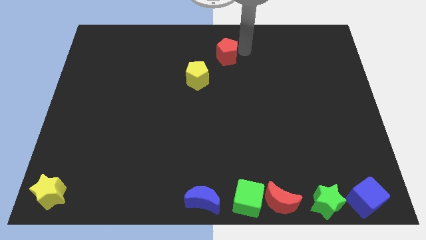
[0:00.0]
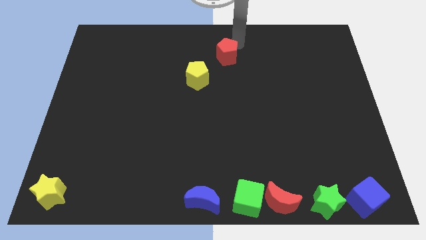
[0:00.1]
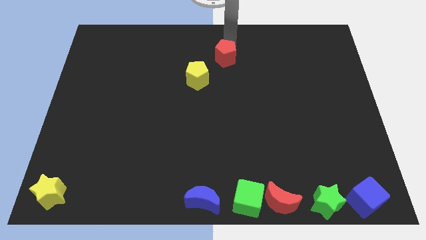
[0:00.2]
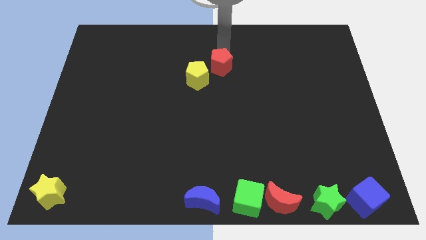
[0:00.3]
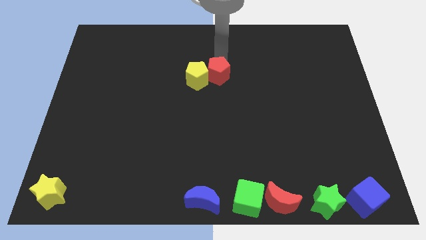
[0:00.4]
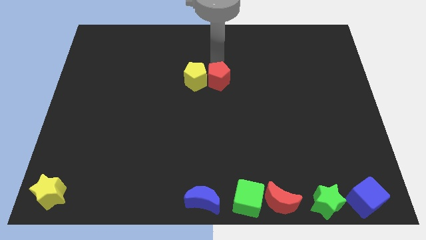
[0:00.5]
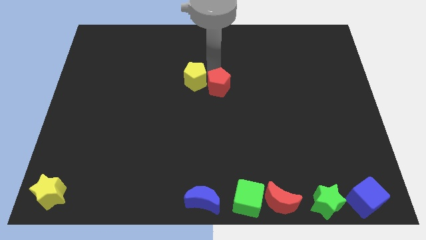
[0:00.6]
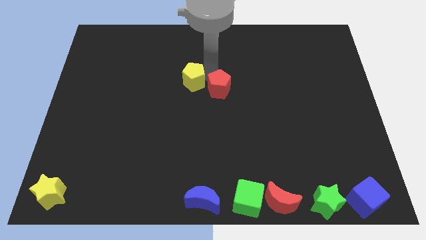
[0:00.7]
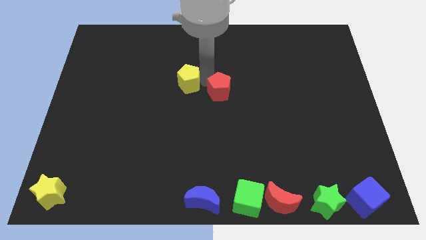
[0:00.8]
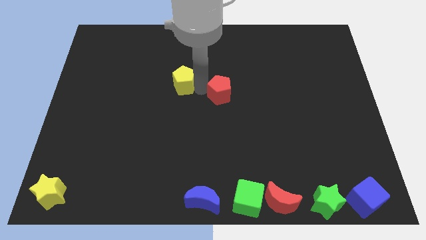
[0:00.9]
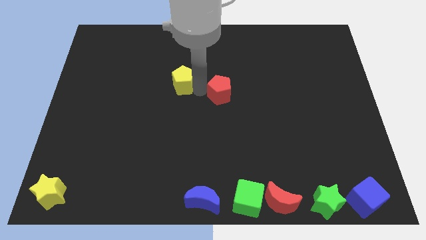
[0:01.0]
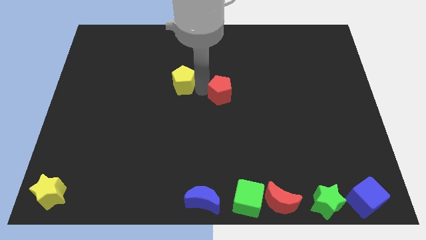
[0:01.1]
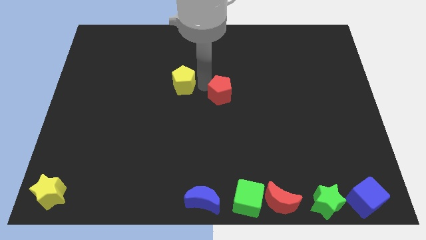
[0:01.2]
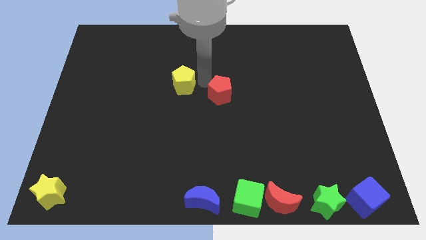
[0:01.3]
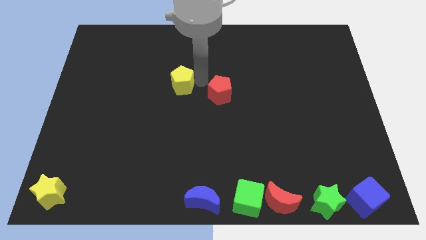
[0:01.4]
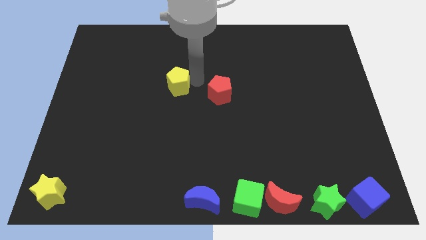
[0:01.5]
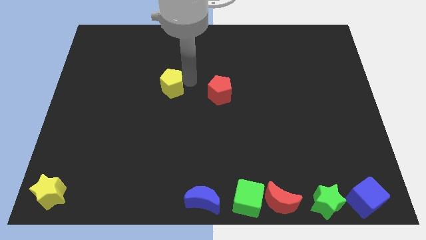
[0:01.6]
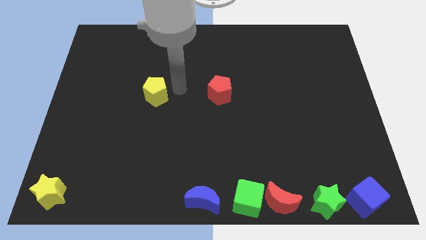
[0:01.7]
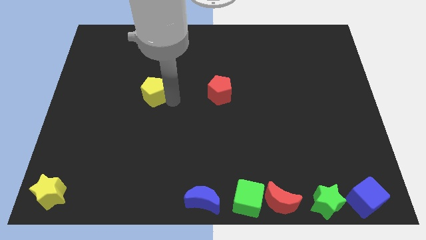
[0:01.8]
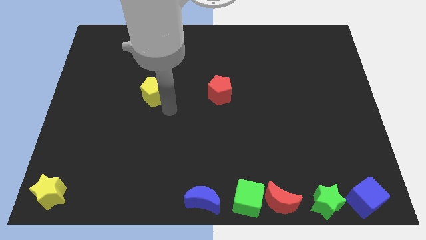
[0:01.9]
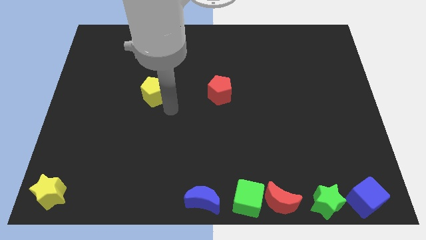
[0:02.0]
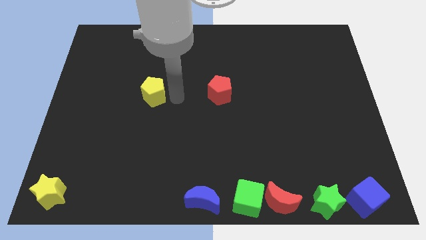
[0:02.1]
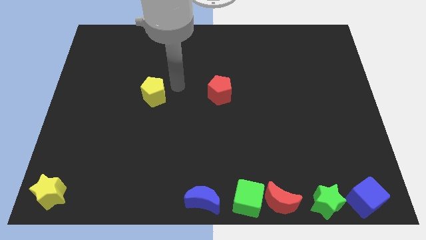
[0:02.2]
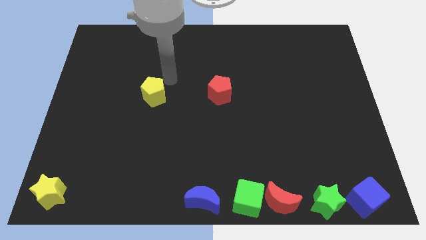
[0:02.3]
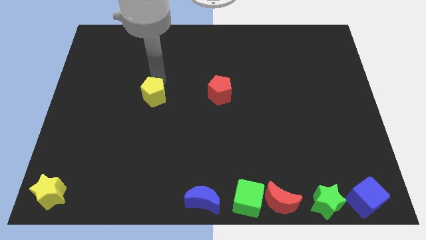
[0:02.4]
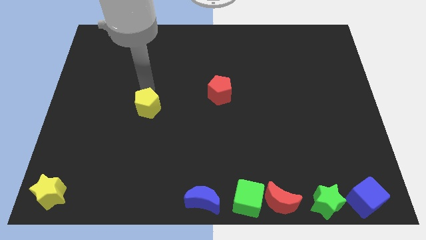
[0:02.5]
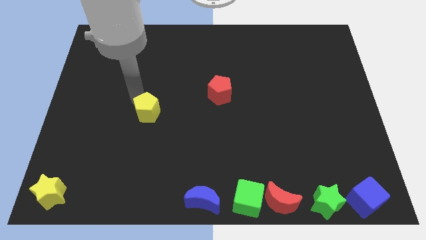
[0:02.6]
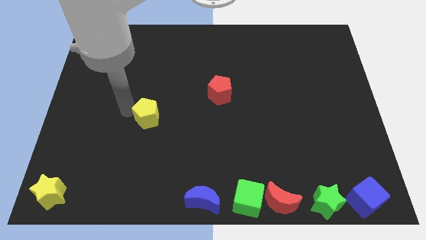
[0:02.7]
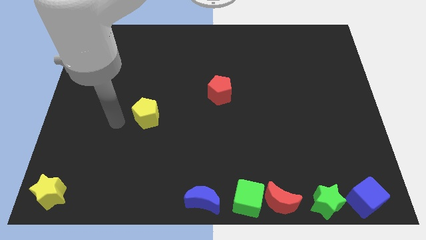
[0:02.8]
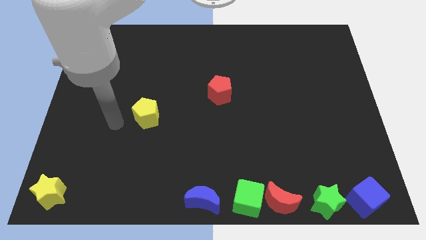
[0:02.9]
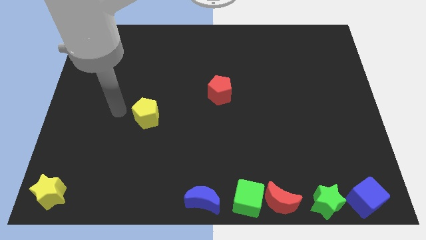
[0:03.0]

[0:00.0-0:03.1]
drag the yellow pentagon slightly downwards

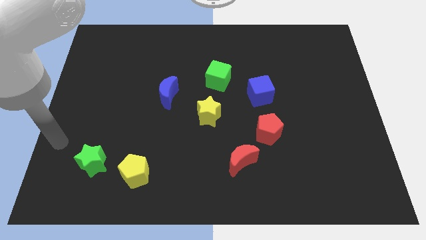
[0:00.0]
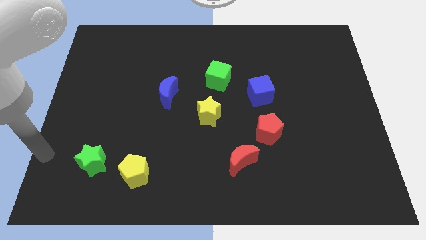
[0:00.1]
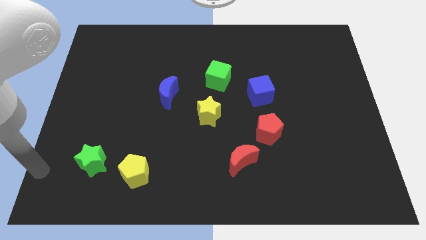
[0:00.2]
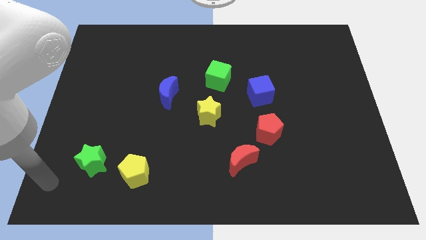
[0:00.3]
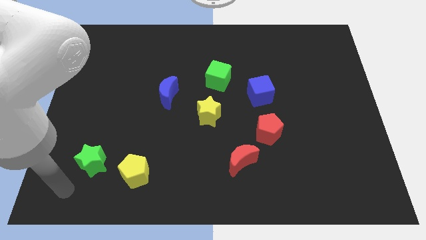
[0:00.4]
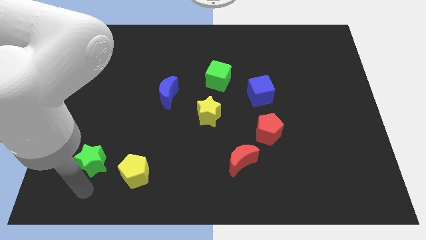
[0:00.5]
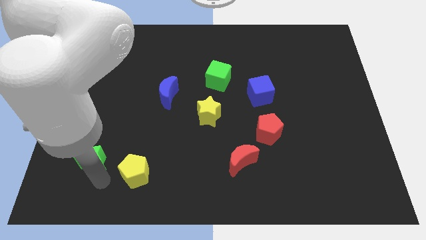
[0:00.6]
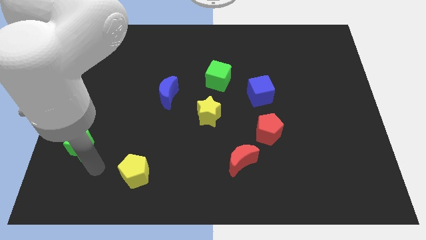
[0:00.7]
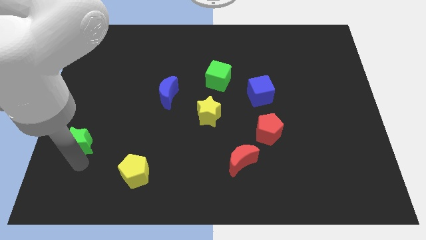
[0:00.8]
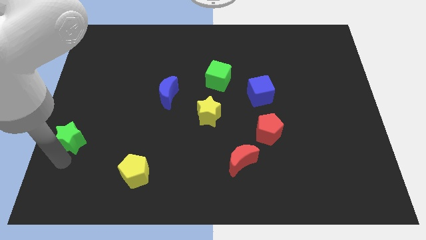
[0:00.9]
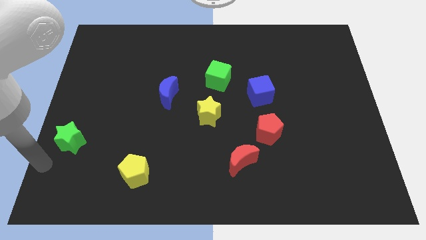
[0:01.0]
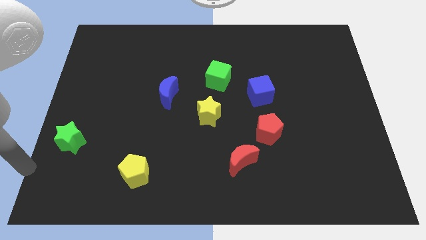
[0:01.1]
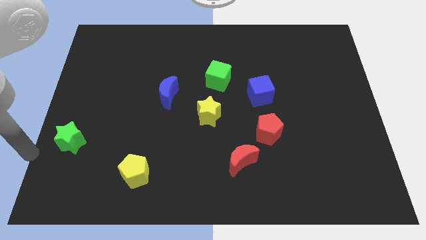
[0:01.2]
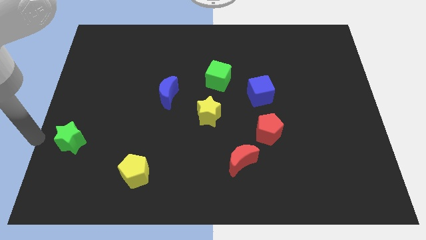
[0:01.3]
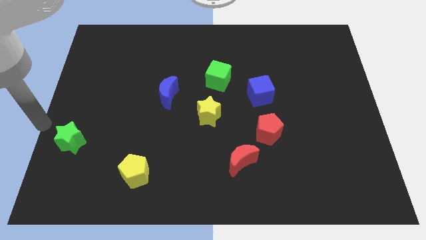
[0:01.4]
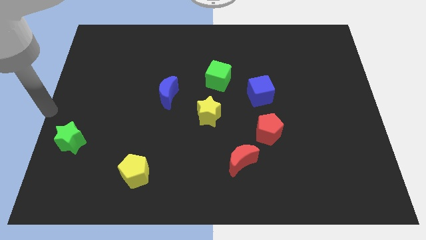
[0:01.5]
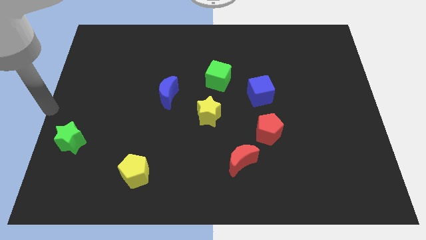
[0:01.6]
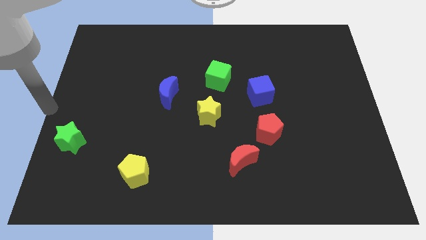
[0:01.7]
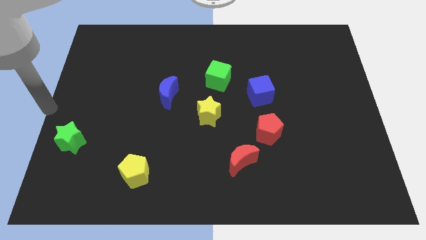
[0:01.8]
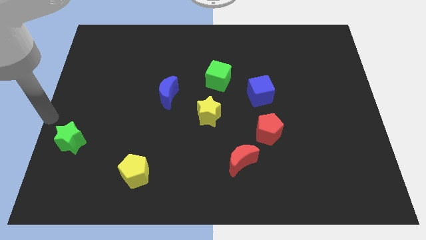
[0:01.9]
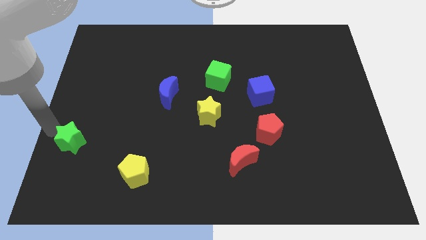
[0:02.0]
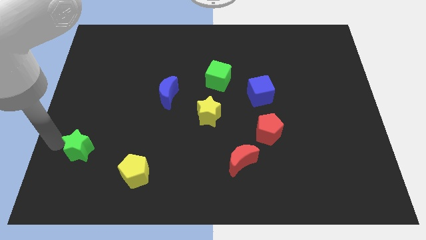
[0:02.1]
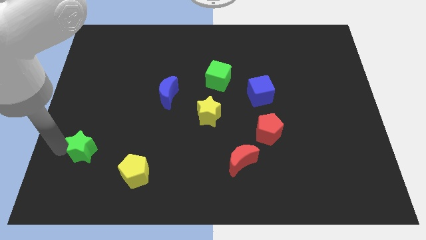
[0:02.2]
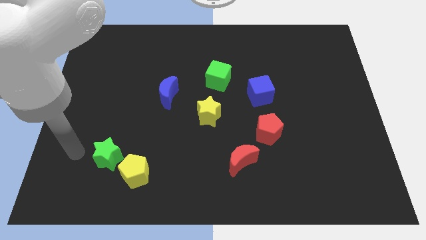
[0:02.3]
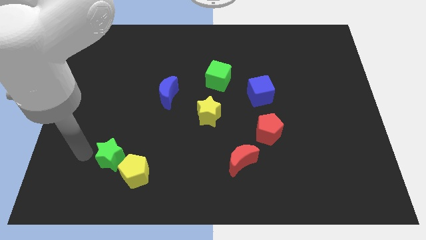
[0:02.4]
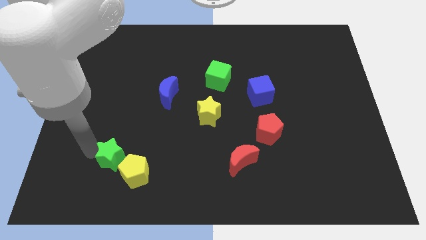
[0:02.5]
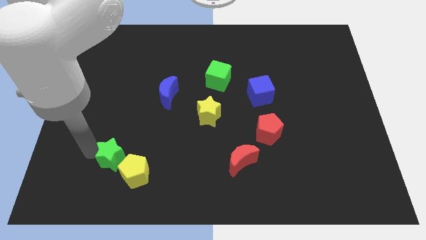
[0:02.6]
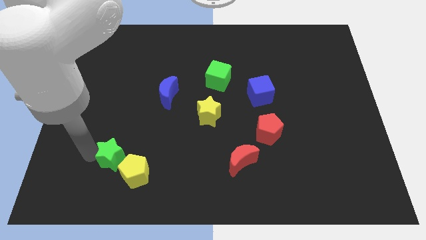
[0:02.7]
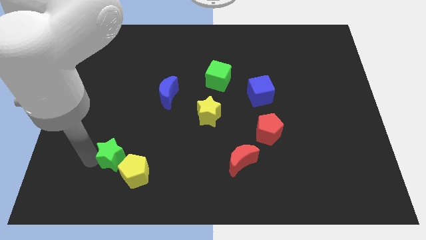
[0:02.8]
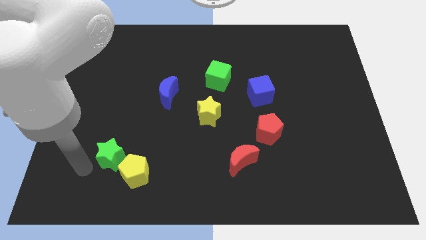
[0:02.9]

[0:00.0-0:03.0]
push green star away from the yellow pentagon and towards the yellow pentagon

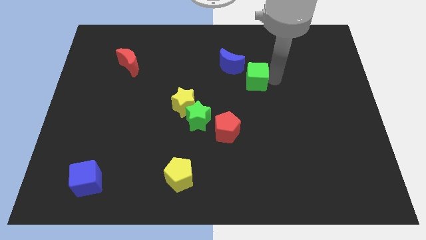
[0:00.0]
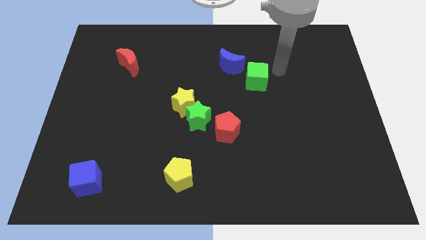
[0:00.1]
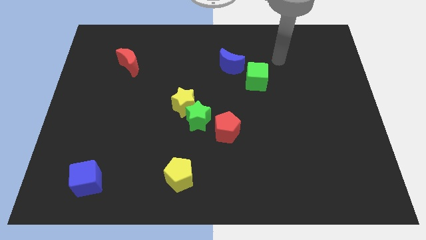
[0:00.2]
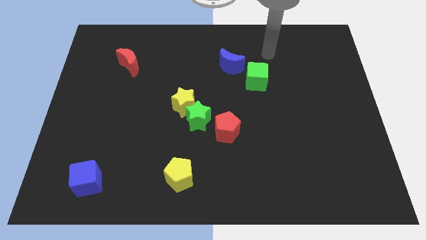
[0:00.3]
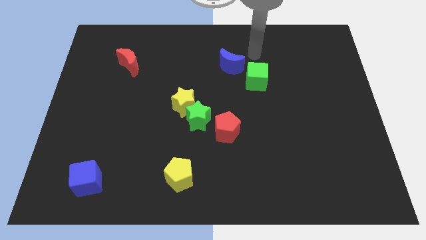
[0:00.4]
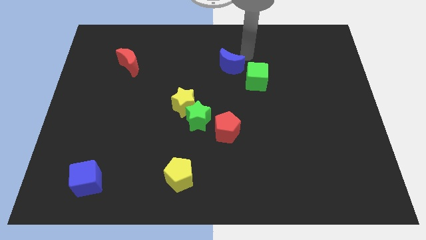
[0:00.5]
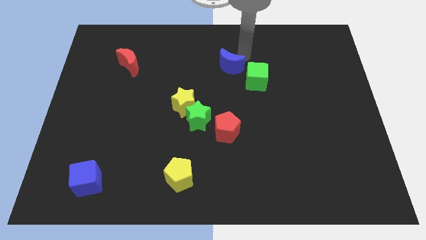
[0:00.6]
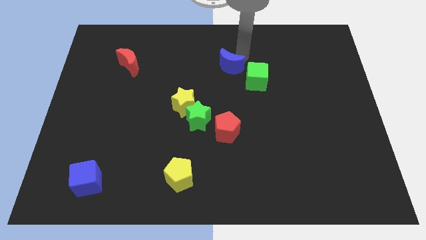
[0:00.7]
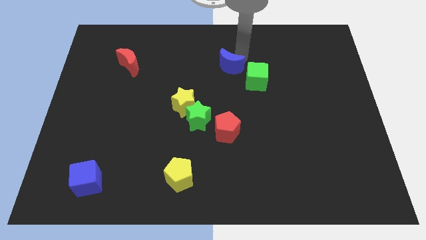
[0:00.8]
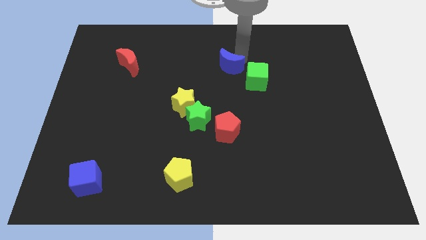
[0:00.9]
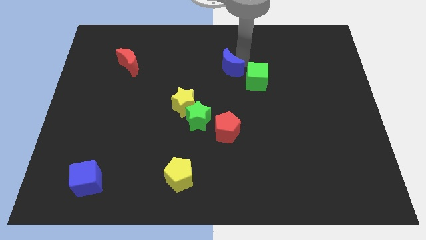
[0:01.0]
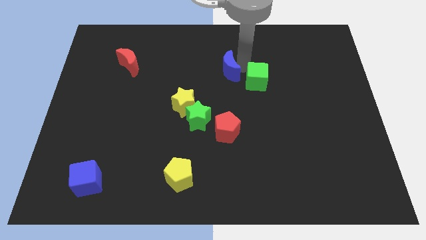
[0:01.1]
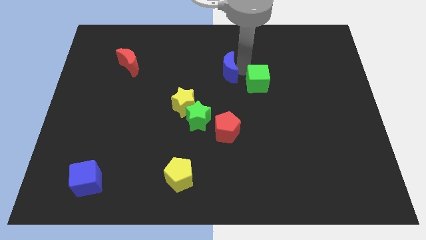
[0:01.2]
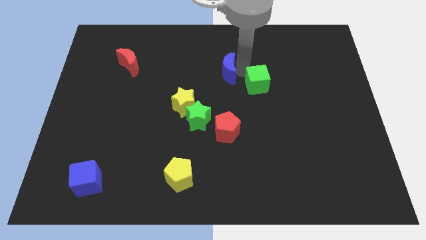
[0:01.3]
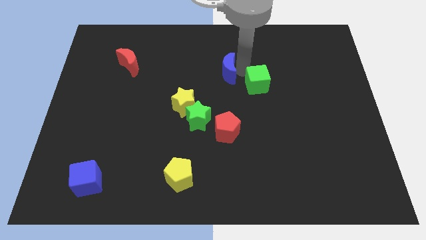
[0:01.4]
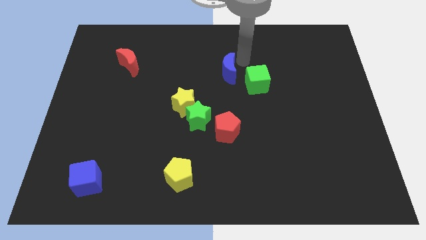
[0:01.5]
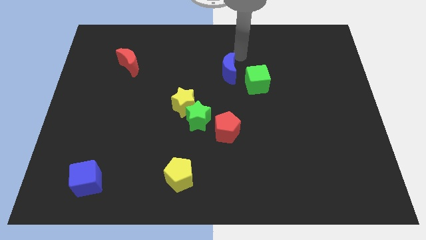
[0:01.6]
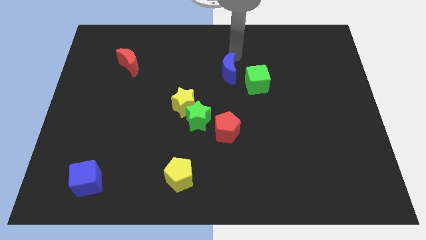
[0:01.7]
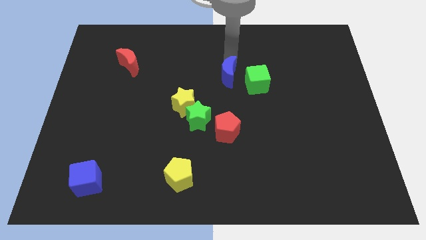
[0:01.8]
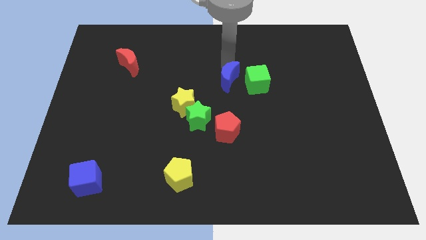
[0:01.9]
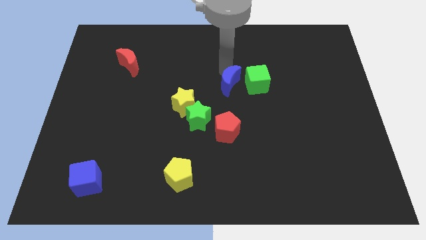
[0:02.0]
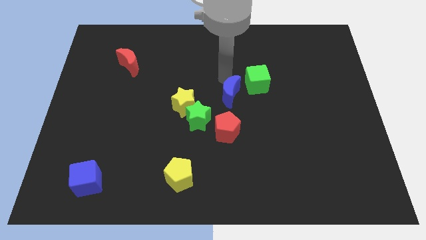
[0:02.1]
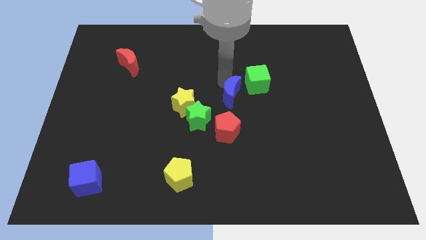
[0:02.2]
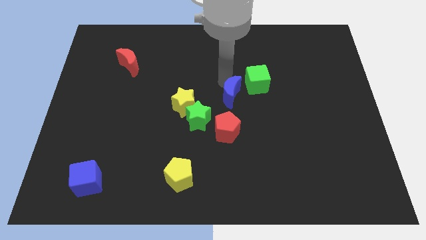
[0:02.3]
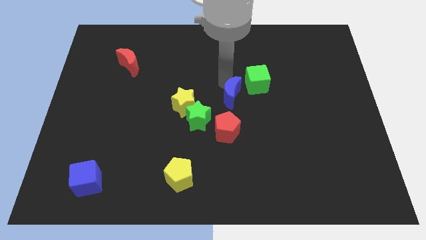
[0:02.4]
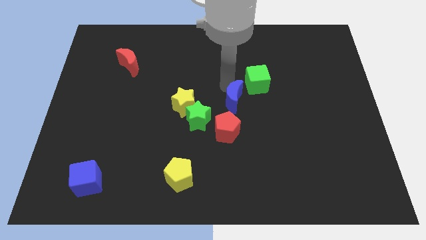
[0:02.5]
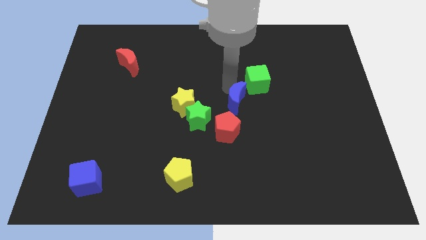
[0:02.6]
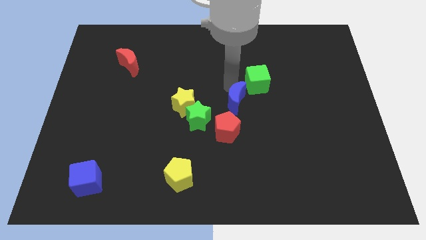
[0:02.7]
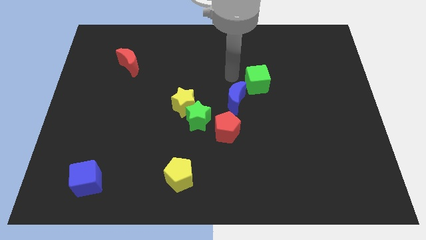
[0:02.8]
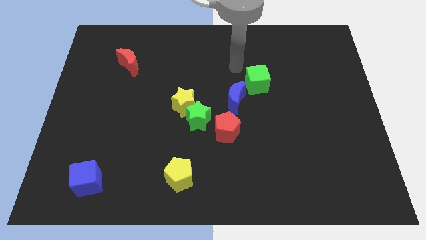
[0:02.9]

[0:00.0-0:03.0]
place blue moon between green cube and red pentagon
